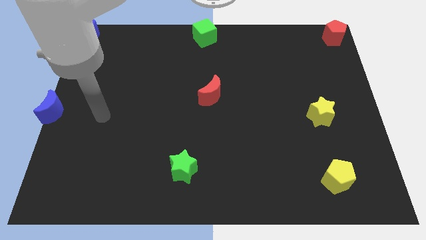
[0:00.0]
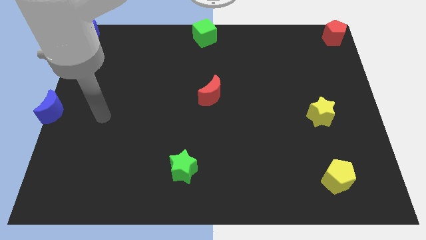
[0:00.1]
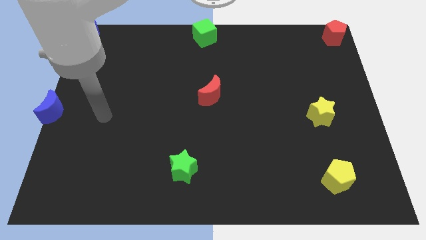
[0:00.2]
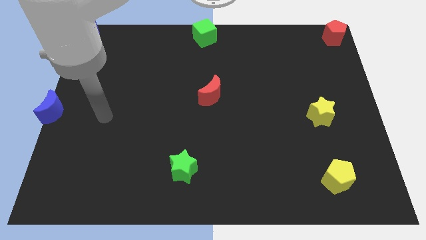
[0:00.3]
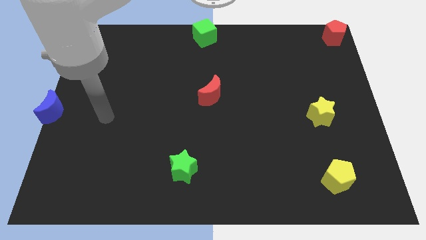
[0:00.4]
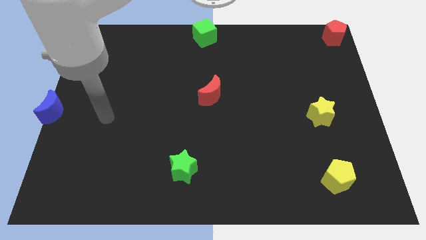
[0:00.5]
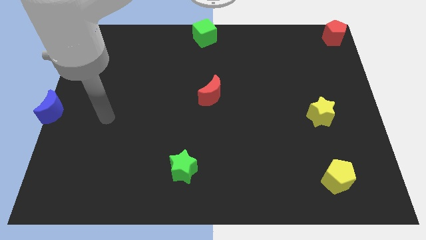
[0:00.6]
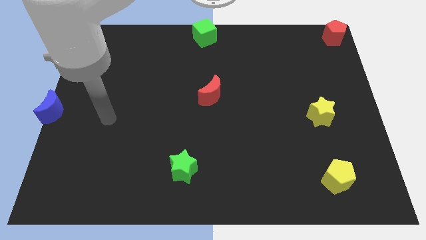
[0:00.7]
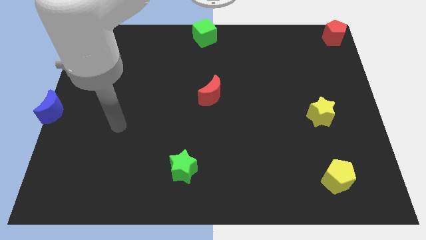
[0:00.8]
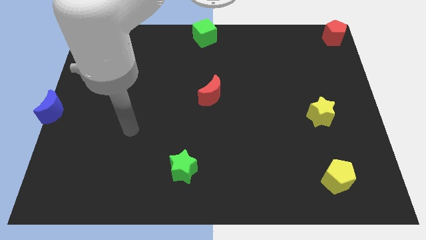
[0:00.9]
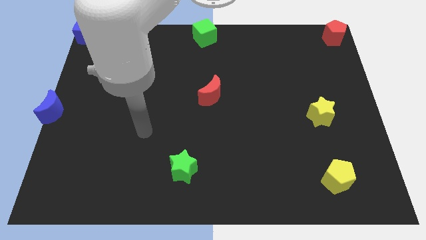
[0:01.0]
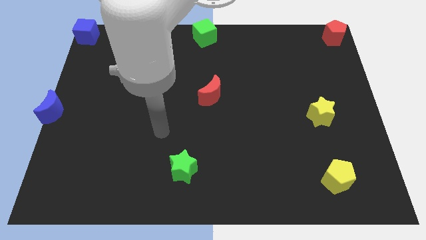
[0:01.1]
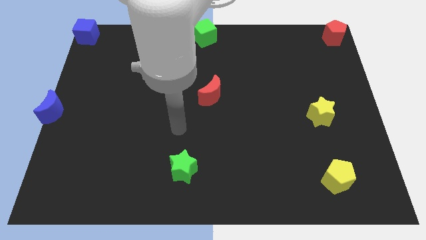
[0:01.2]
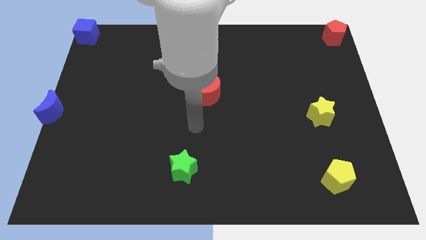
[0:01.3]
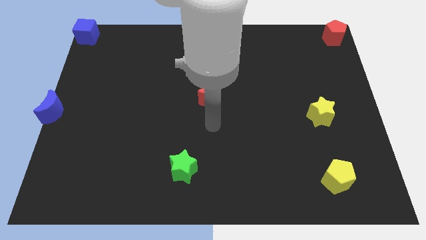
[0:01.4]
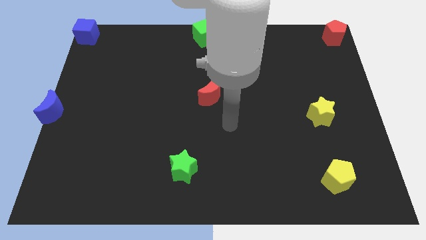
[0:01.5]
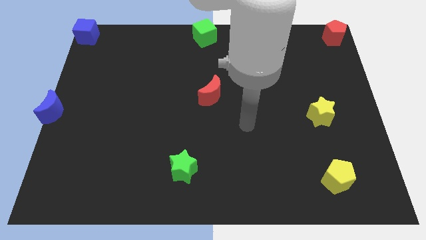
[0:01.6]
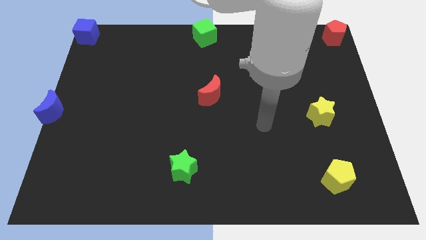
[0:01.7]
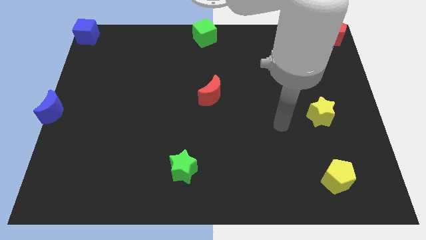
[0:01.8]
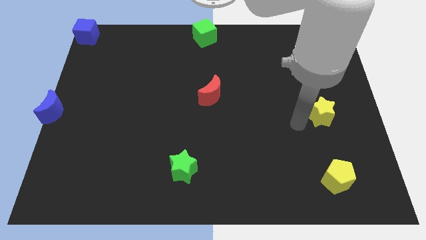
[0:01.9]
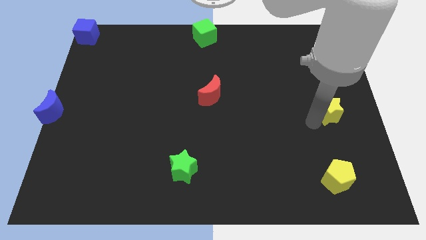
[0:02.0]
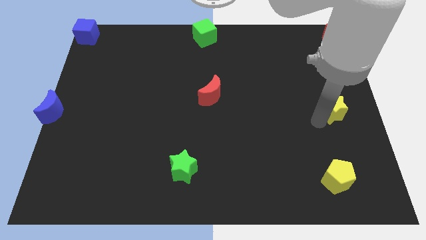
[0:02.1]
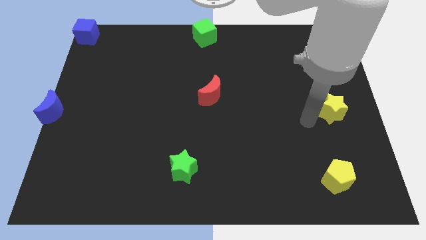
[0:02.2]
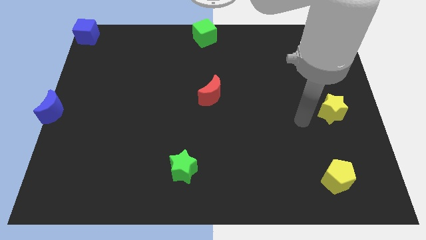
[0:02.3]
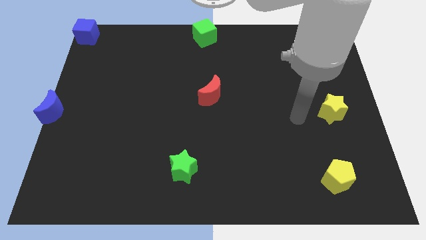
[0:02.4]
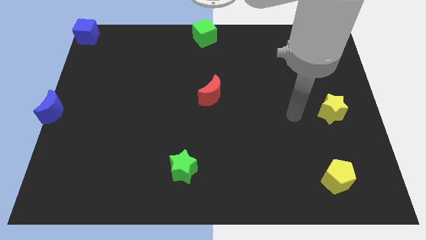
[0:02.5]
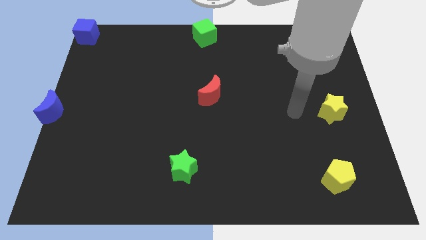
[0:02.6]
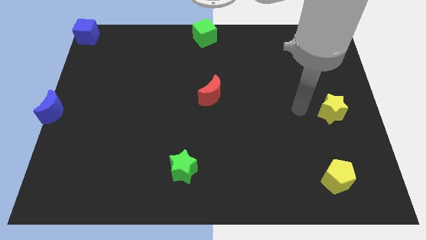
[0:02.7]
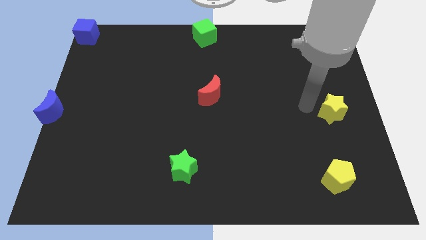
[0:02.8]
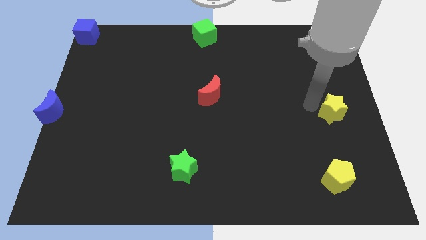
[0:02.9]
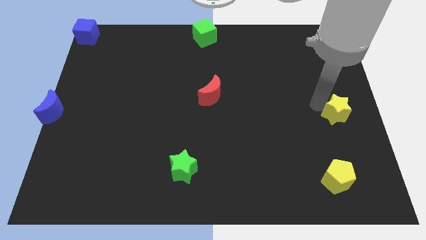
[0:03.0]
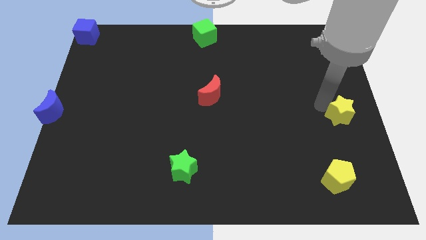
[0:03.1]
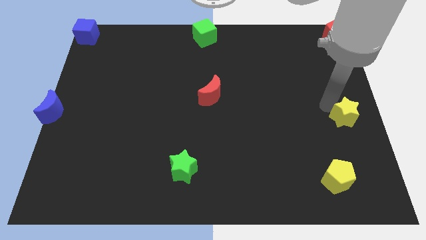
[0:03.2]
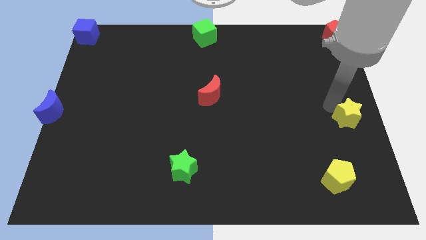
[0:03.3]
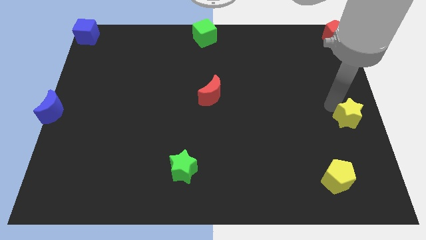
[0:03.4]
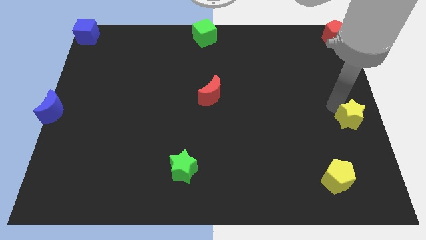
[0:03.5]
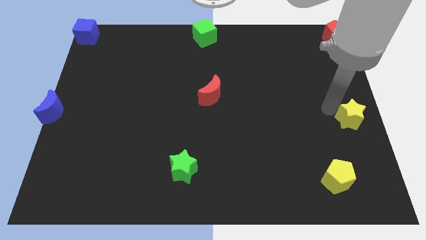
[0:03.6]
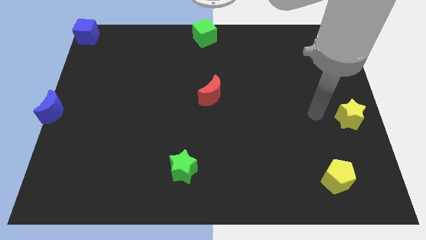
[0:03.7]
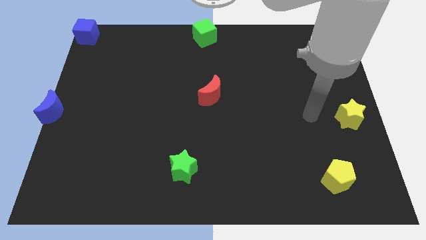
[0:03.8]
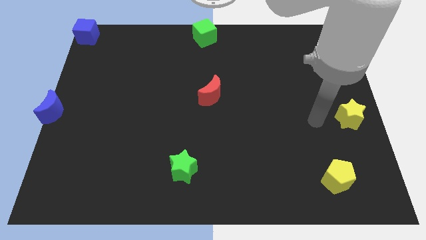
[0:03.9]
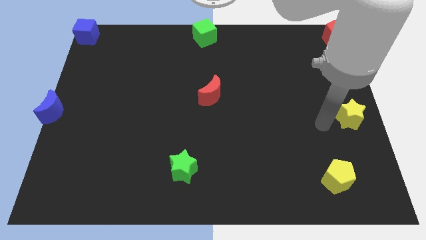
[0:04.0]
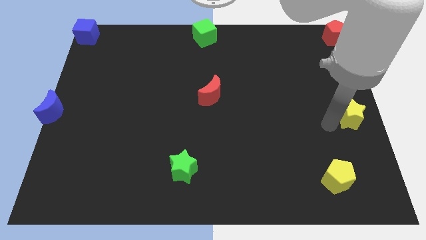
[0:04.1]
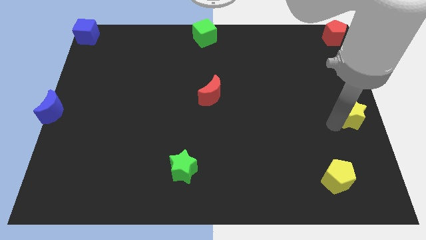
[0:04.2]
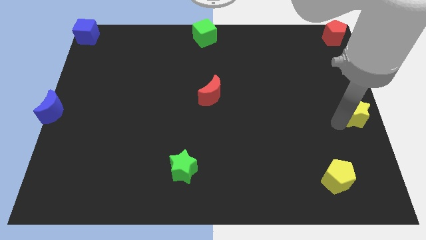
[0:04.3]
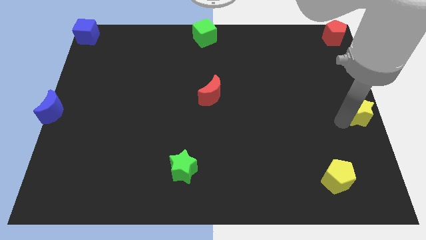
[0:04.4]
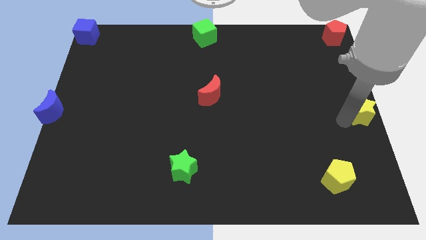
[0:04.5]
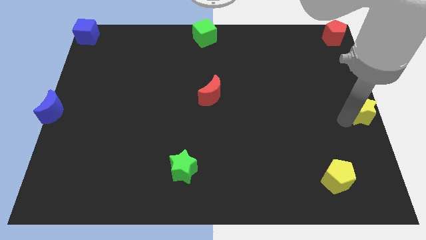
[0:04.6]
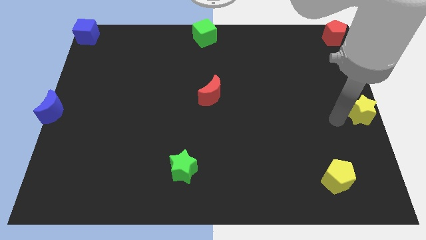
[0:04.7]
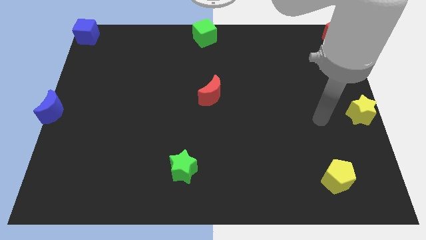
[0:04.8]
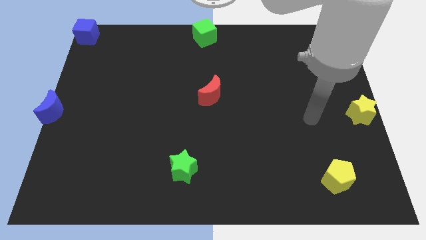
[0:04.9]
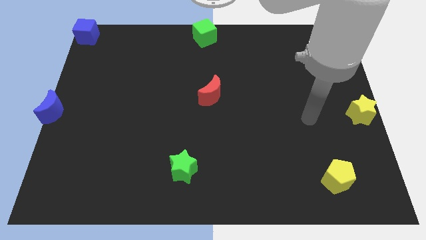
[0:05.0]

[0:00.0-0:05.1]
push yellow star to the center right

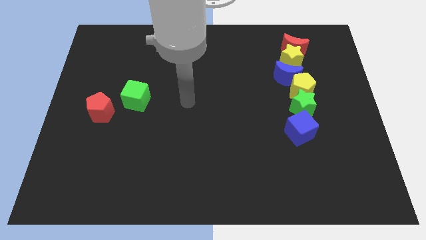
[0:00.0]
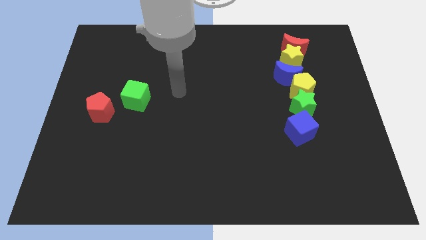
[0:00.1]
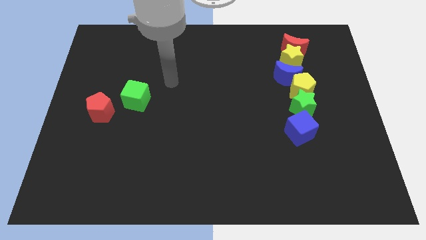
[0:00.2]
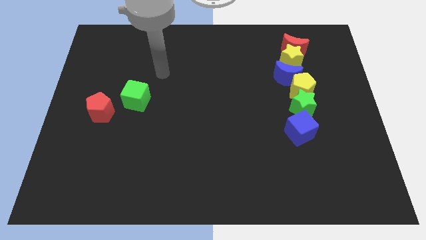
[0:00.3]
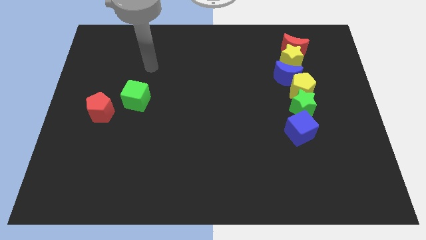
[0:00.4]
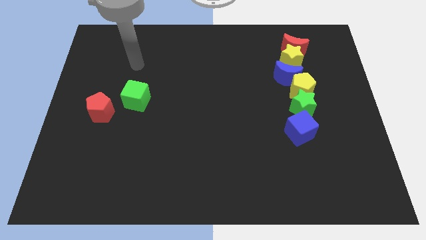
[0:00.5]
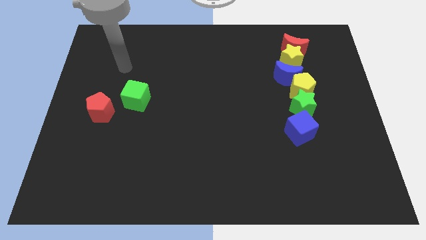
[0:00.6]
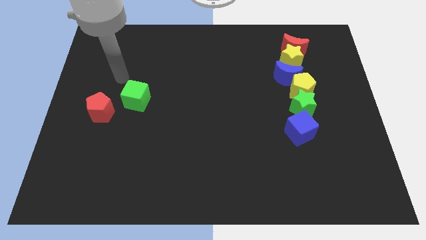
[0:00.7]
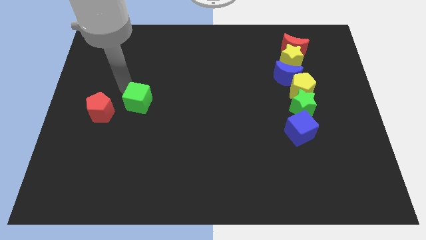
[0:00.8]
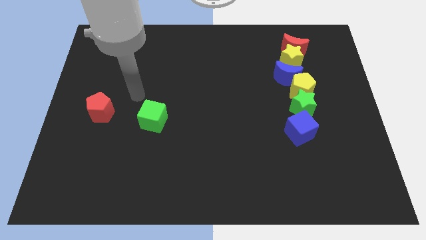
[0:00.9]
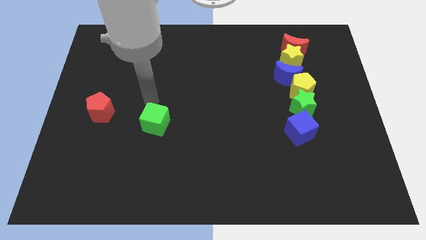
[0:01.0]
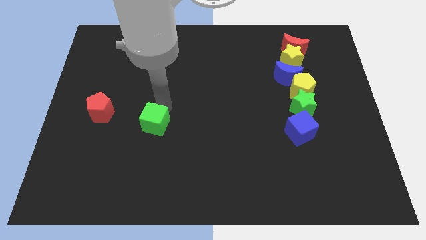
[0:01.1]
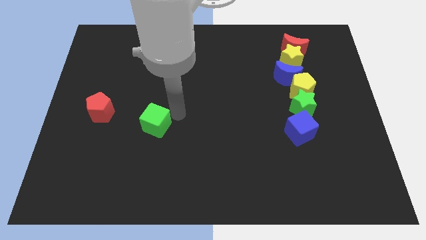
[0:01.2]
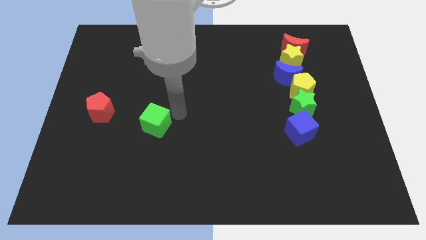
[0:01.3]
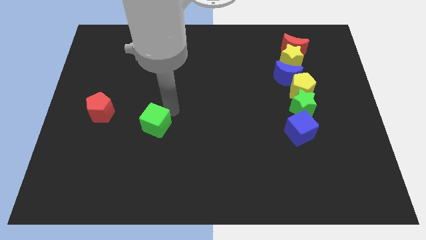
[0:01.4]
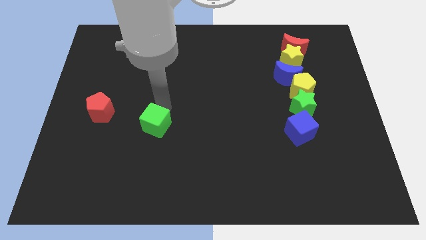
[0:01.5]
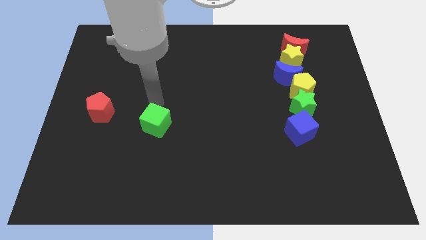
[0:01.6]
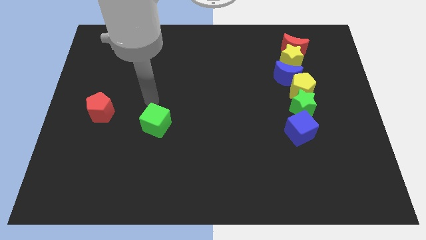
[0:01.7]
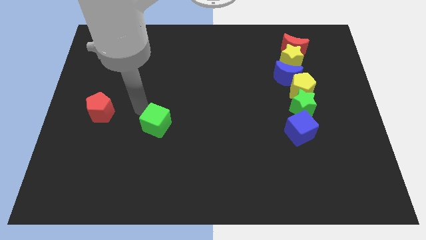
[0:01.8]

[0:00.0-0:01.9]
push the green cube to the right side of the red pentagon

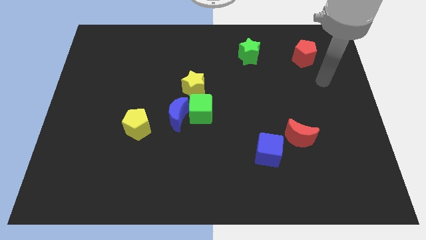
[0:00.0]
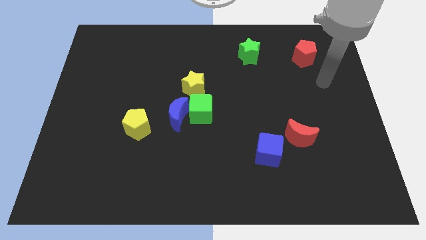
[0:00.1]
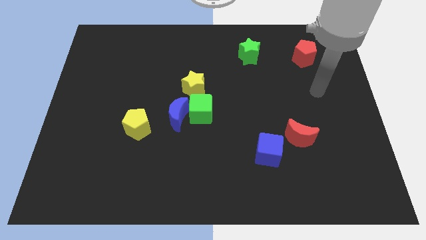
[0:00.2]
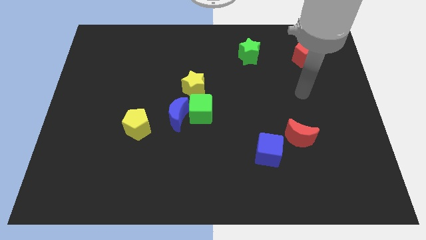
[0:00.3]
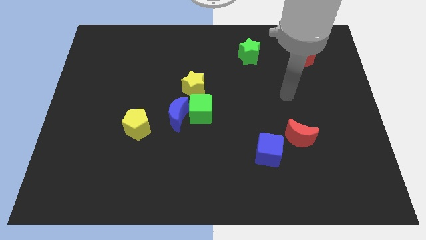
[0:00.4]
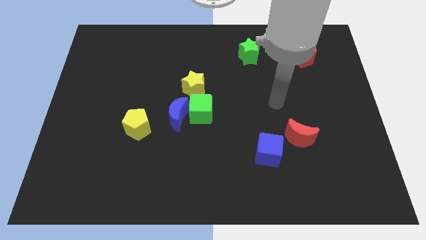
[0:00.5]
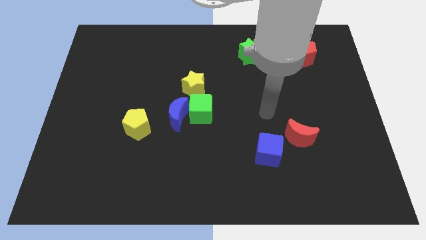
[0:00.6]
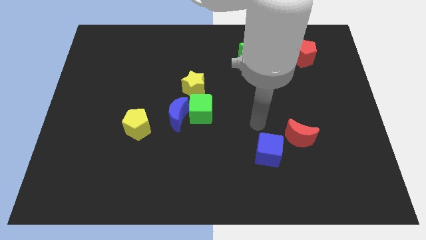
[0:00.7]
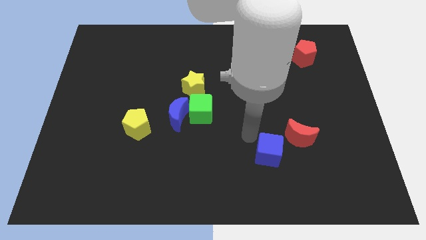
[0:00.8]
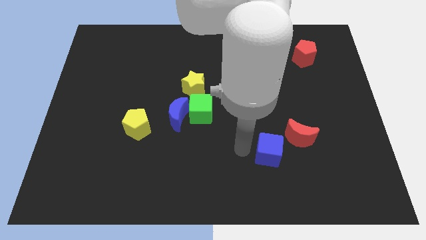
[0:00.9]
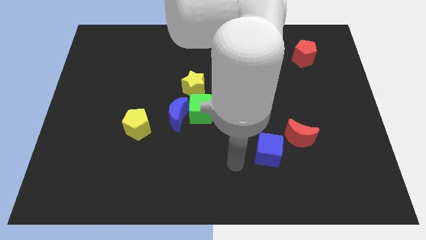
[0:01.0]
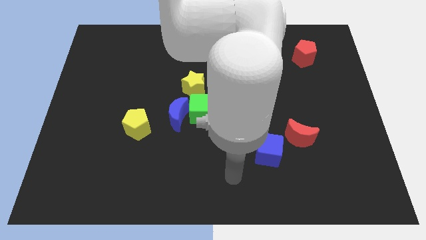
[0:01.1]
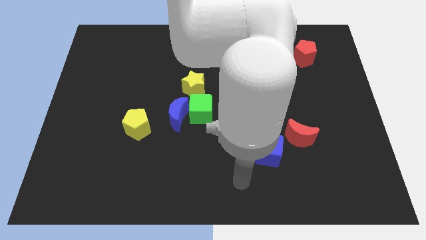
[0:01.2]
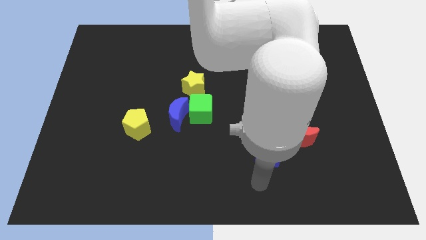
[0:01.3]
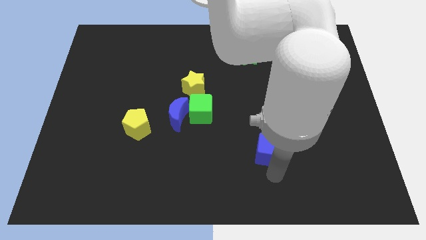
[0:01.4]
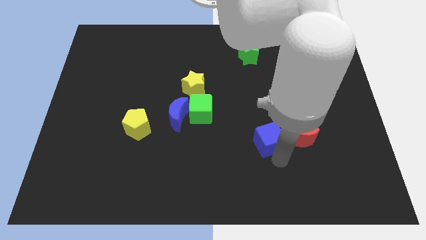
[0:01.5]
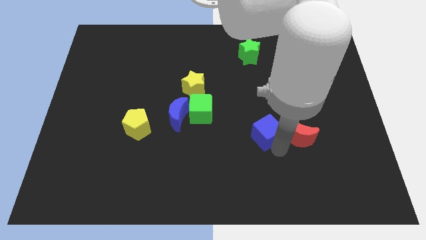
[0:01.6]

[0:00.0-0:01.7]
place the blue cube to the left of the red moon

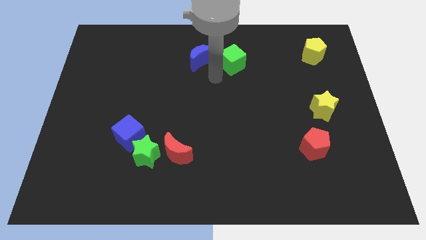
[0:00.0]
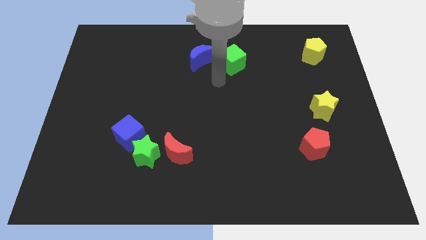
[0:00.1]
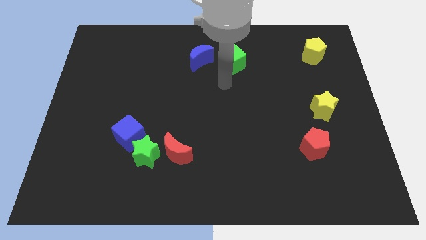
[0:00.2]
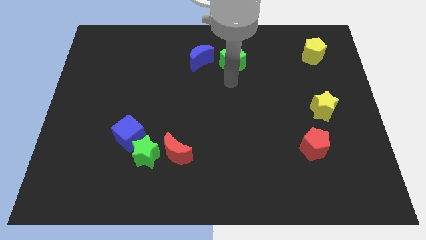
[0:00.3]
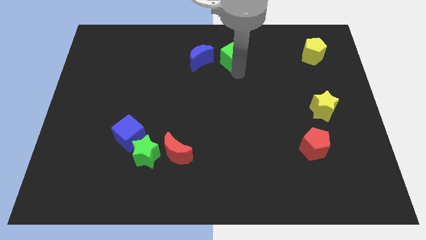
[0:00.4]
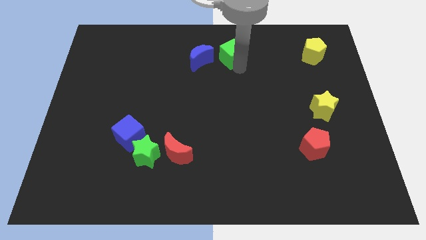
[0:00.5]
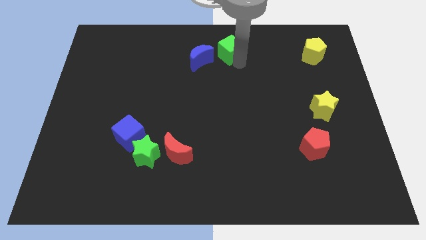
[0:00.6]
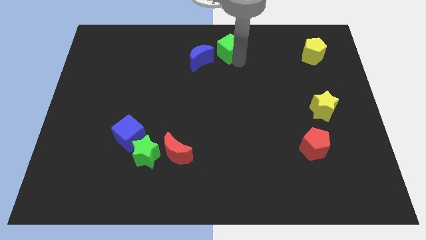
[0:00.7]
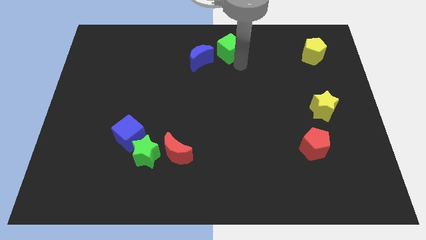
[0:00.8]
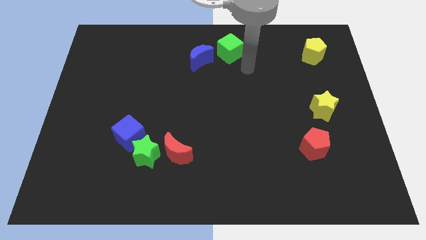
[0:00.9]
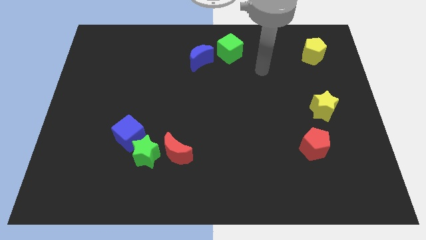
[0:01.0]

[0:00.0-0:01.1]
push the green cube towards the top center of the board
